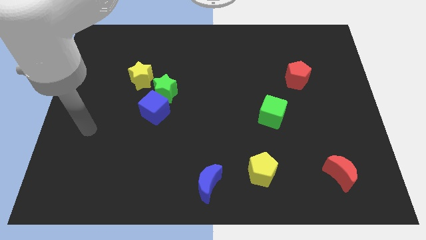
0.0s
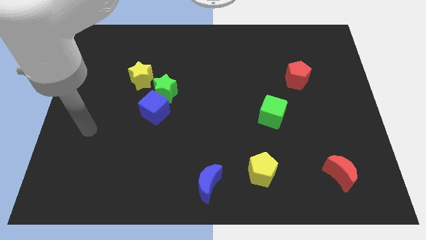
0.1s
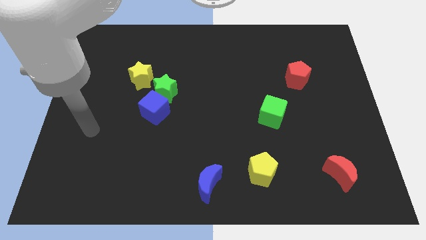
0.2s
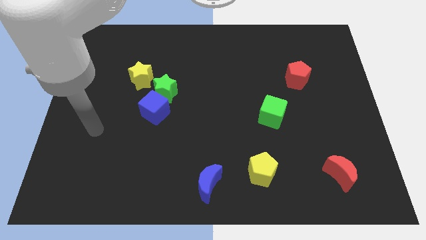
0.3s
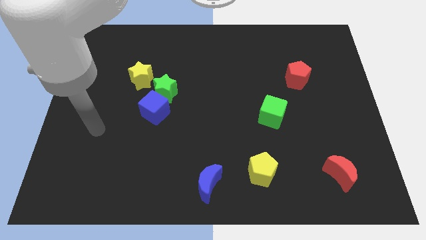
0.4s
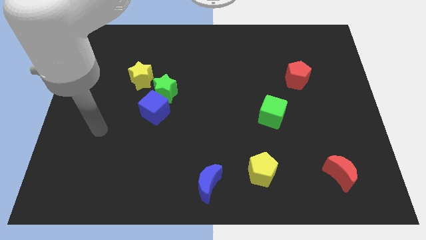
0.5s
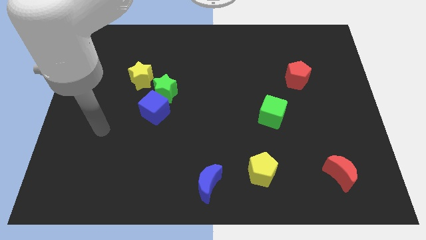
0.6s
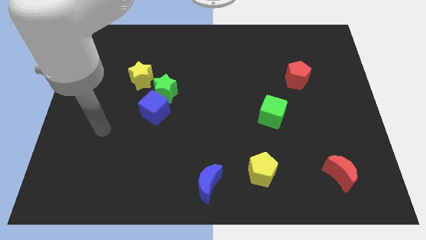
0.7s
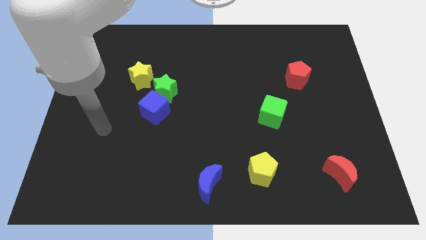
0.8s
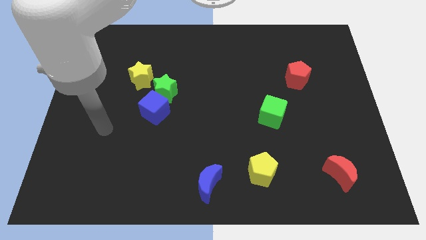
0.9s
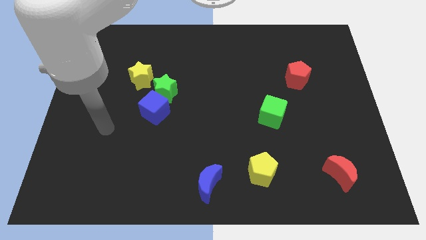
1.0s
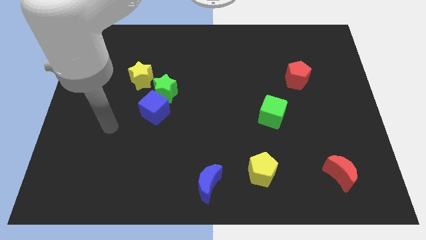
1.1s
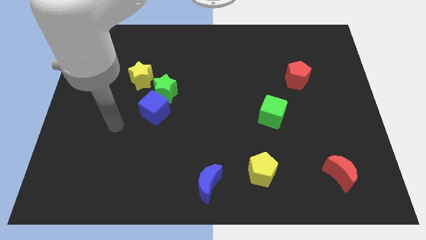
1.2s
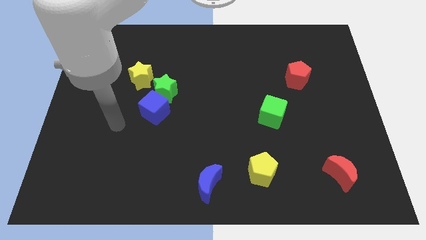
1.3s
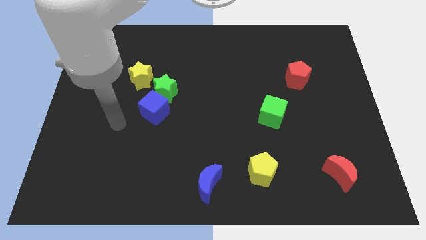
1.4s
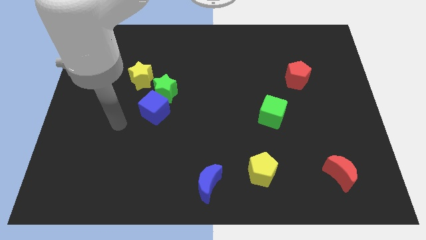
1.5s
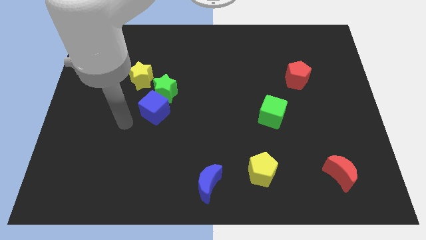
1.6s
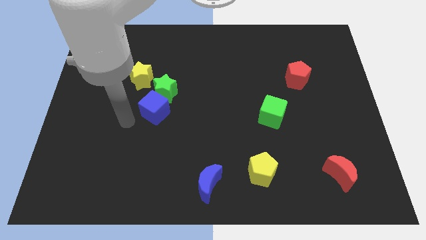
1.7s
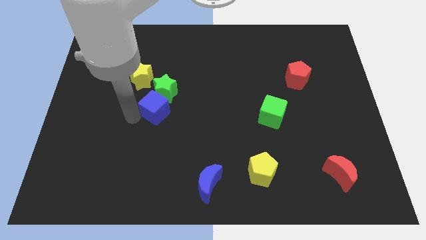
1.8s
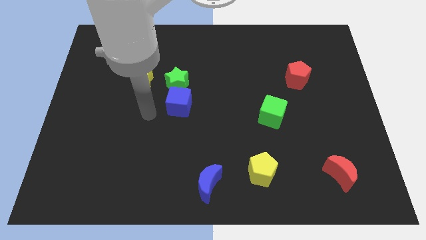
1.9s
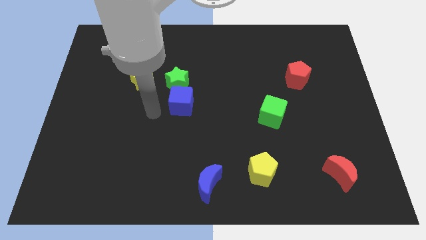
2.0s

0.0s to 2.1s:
move blue cube slighty towards its right

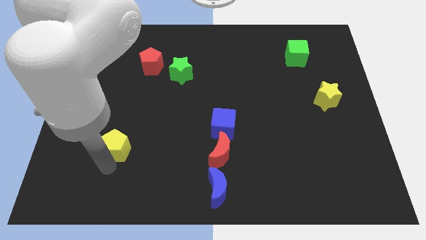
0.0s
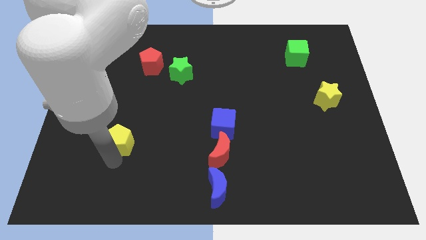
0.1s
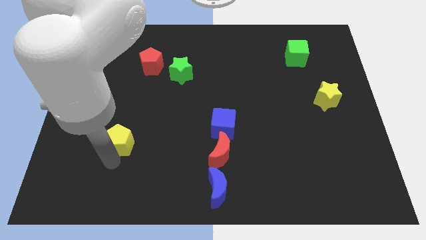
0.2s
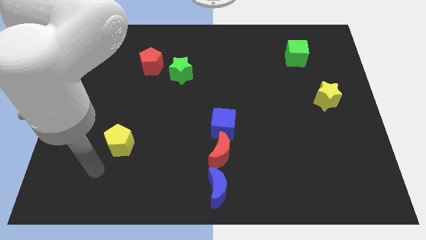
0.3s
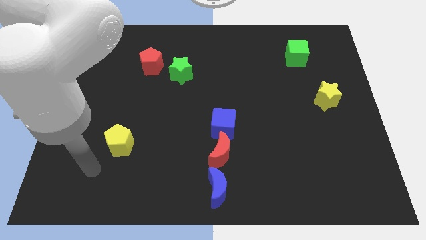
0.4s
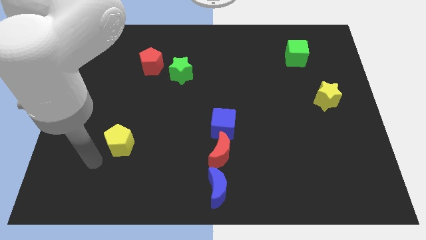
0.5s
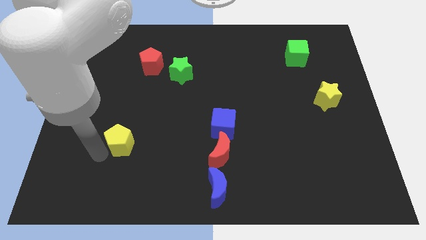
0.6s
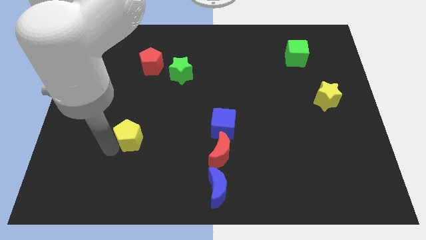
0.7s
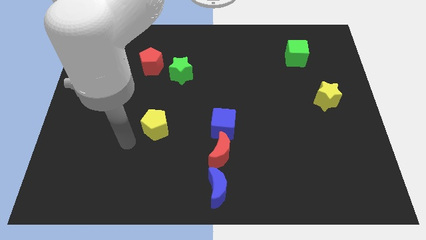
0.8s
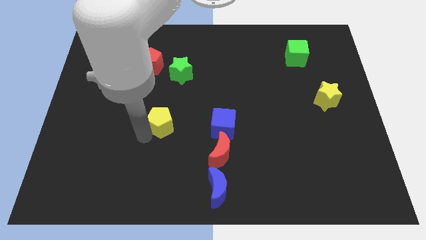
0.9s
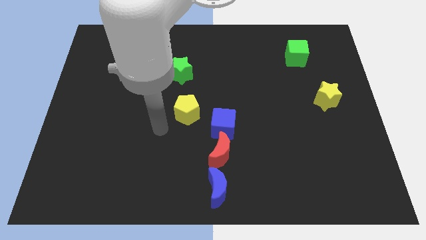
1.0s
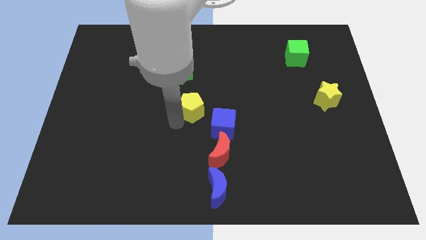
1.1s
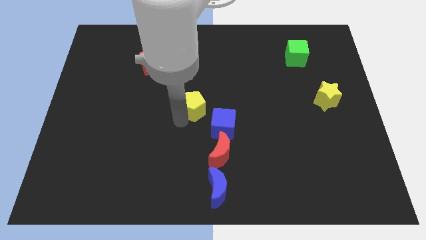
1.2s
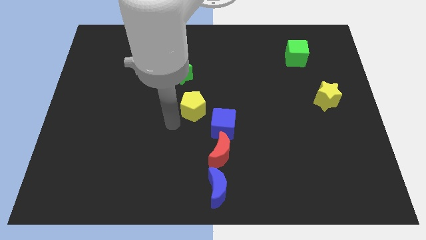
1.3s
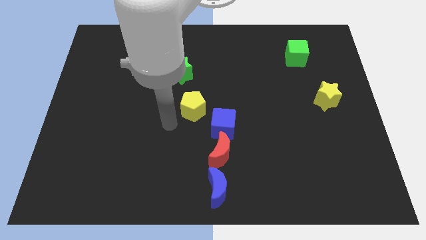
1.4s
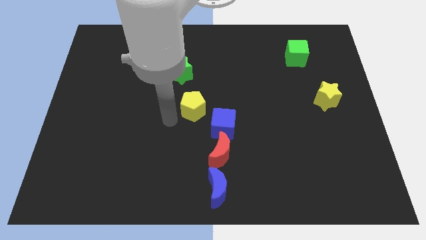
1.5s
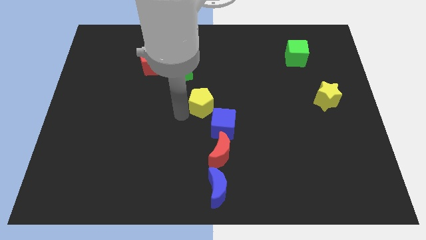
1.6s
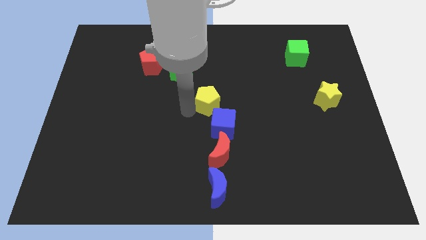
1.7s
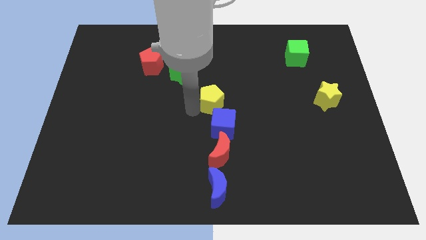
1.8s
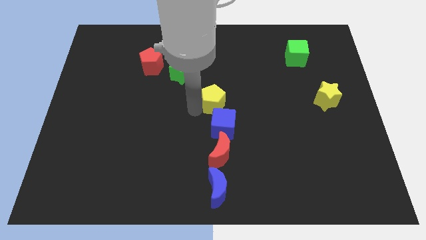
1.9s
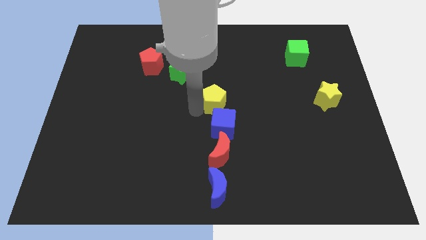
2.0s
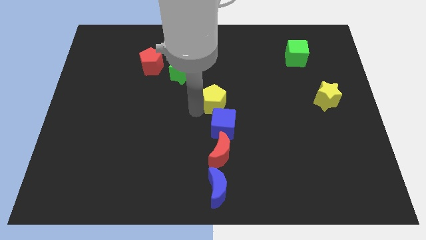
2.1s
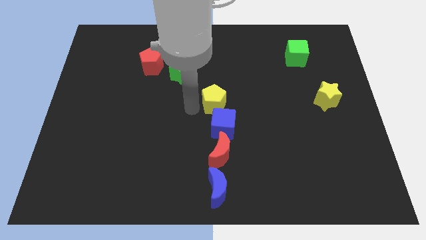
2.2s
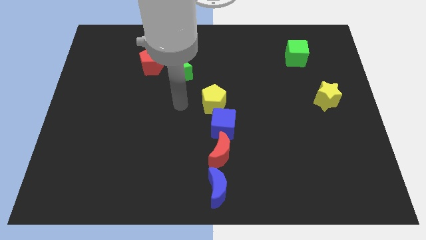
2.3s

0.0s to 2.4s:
place the yellow pentagon above the blue cube

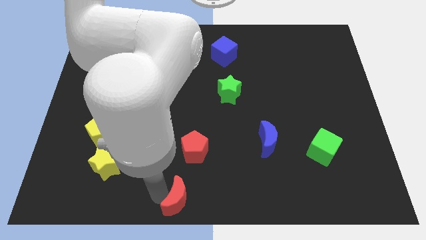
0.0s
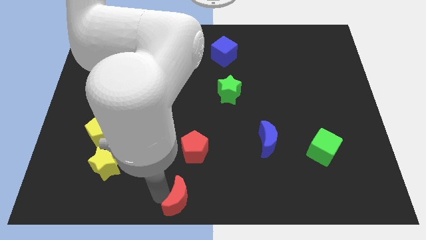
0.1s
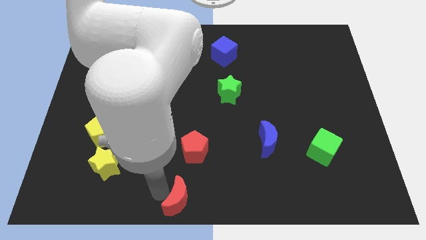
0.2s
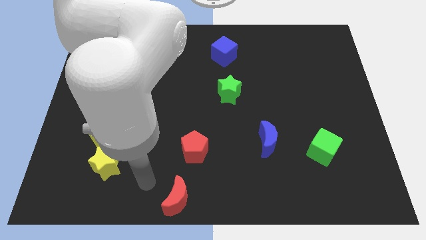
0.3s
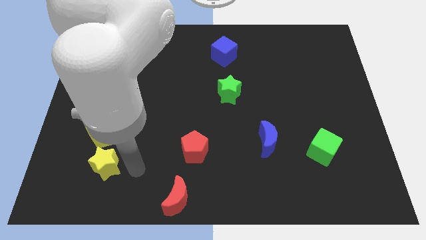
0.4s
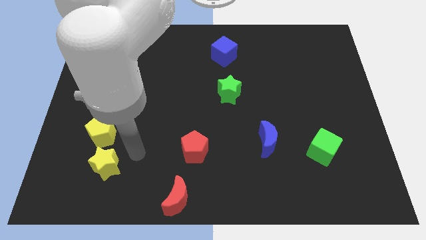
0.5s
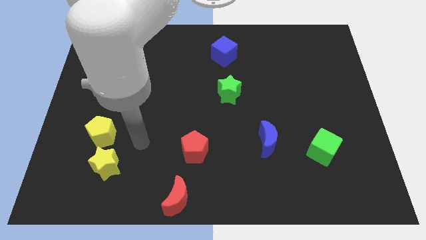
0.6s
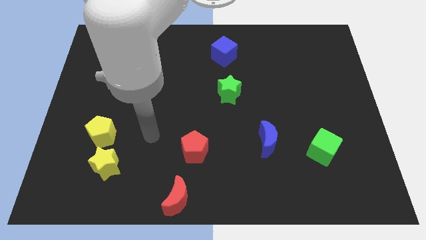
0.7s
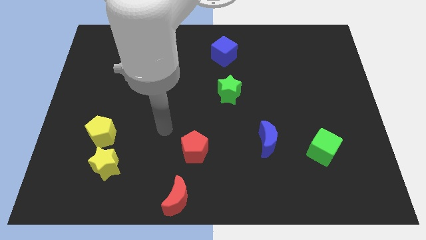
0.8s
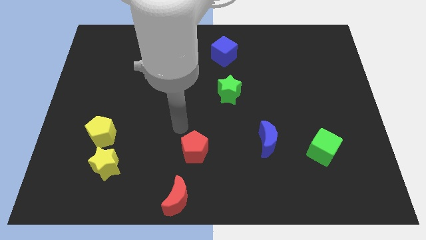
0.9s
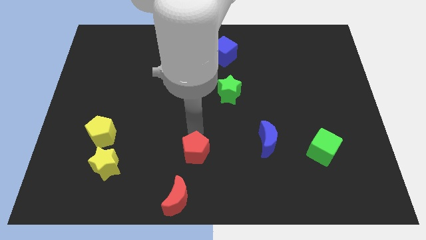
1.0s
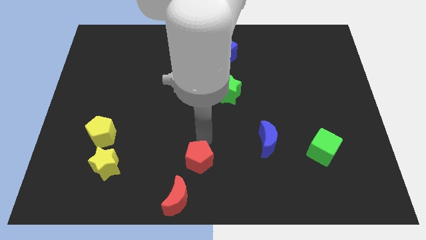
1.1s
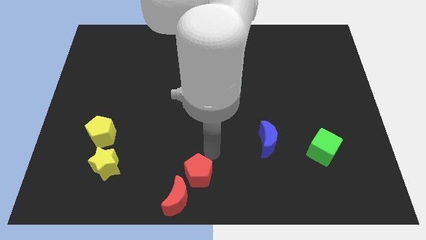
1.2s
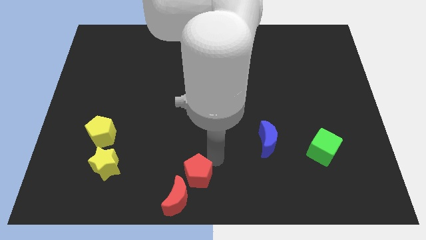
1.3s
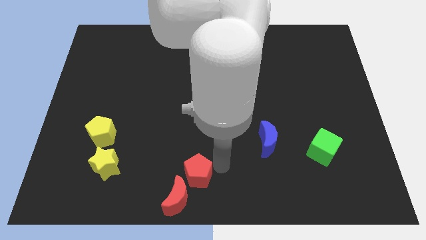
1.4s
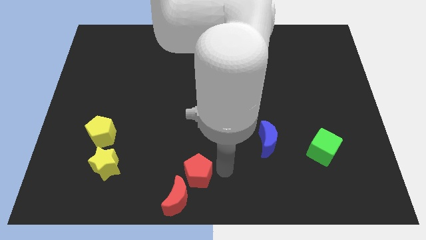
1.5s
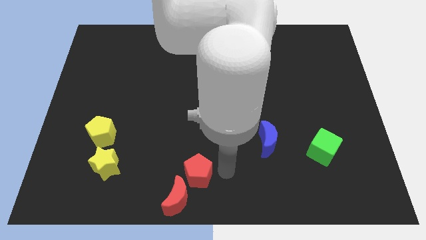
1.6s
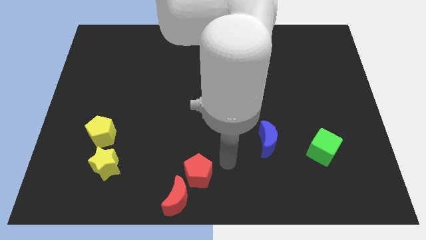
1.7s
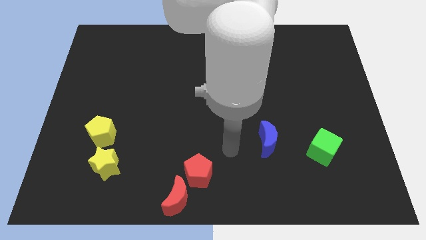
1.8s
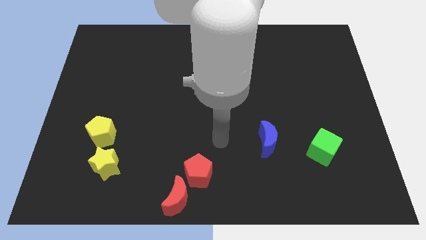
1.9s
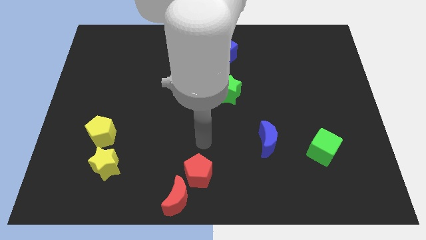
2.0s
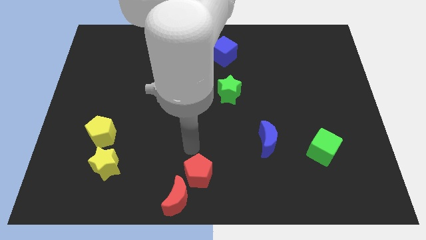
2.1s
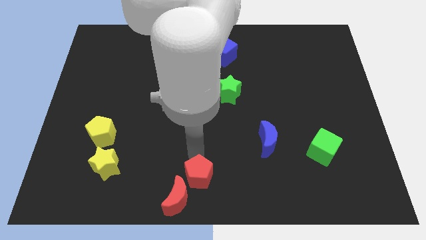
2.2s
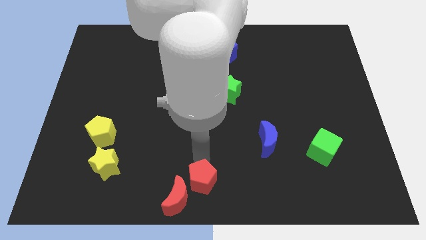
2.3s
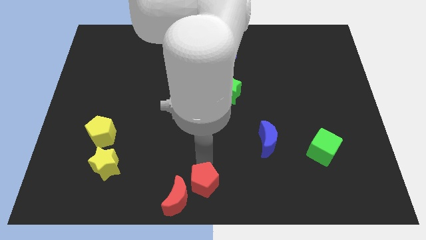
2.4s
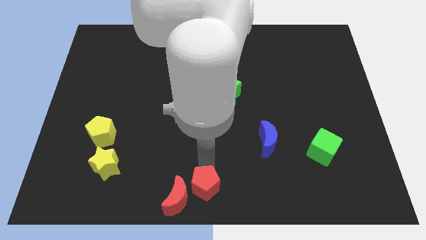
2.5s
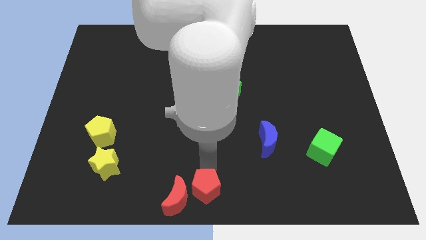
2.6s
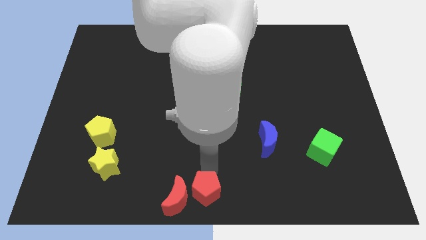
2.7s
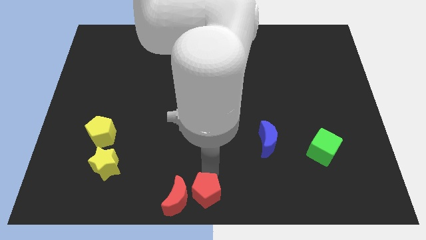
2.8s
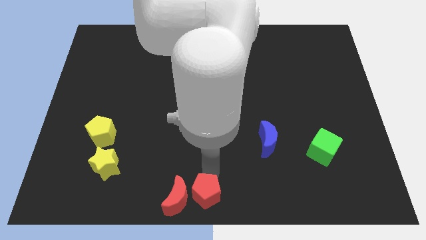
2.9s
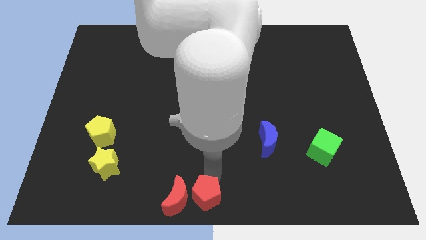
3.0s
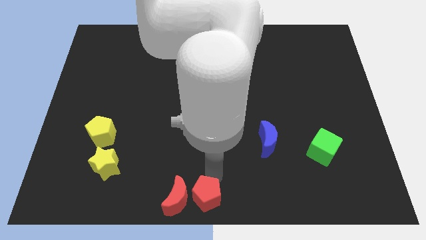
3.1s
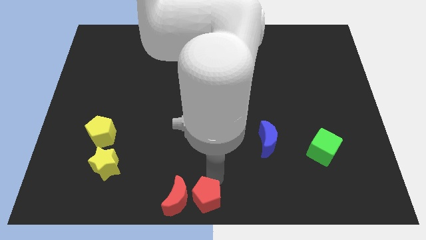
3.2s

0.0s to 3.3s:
push the red pentagon to the right of red moon

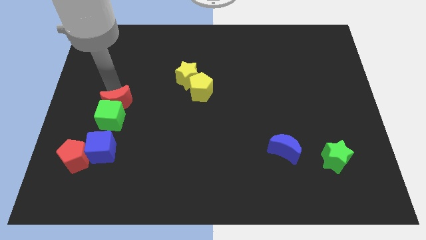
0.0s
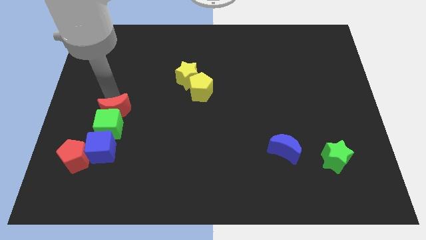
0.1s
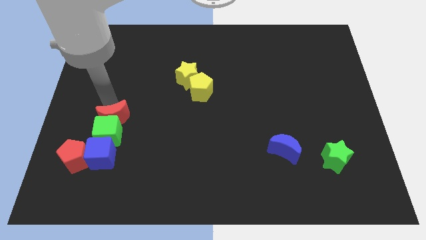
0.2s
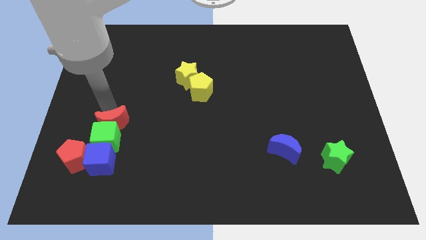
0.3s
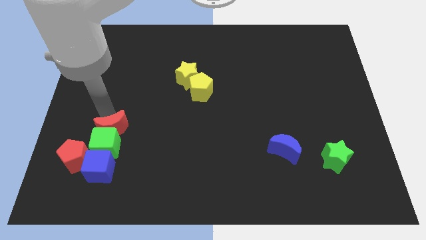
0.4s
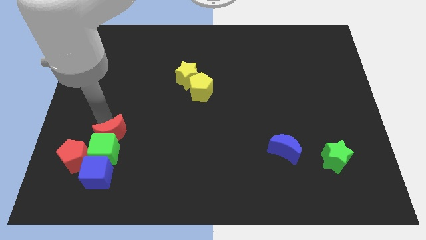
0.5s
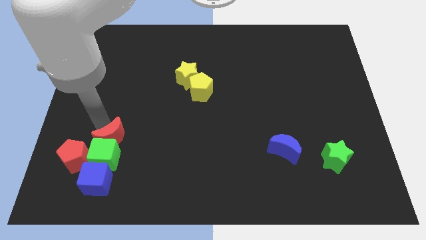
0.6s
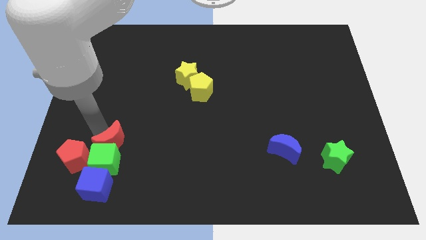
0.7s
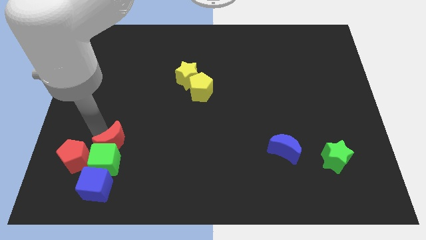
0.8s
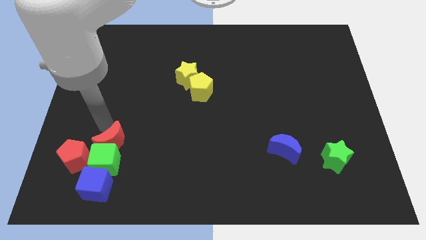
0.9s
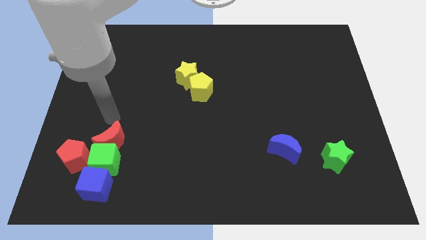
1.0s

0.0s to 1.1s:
push the group of blocks to the bottom left

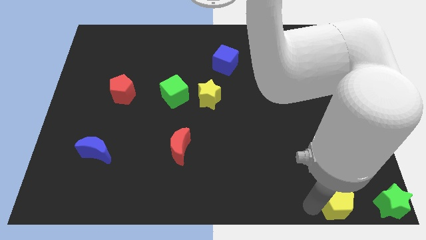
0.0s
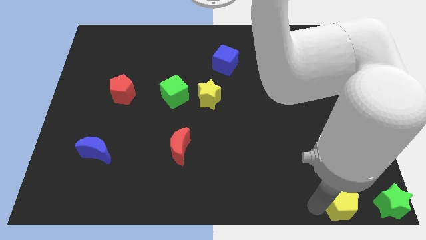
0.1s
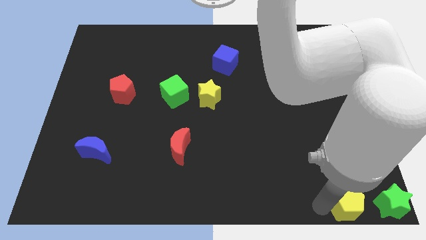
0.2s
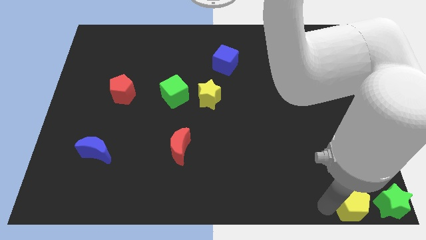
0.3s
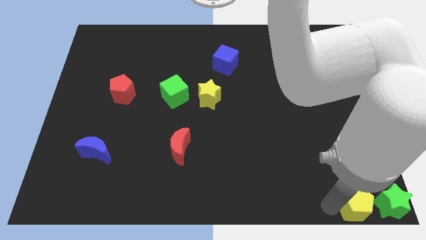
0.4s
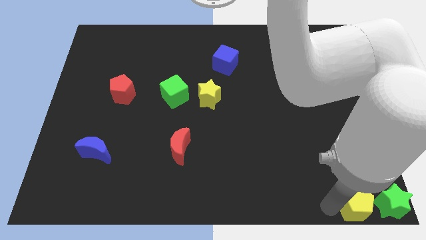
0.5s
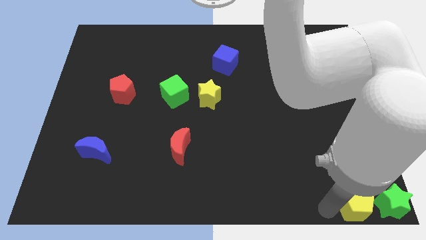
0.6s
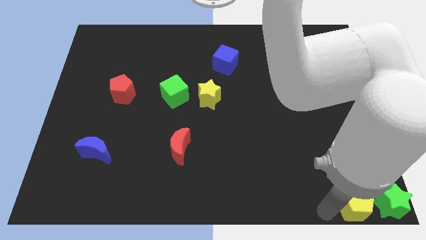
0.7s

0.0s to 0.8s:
push the yellow pentagon to th left of green star
